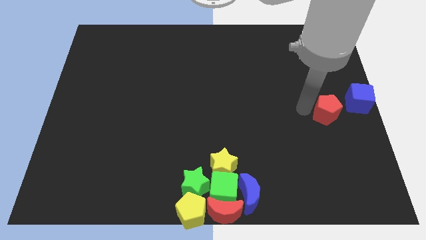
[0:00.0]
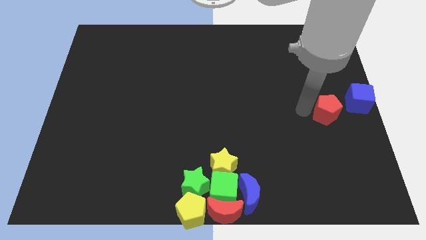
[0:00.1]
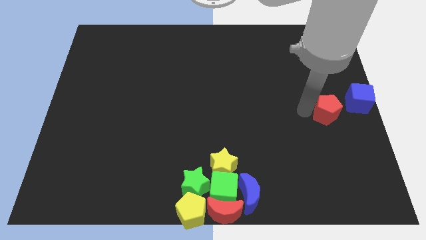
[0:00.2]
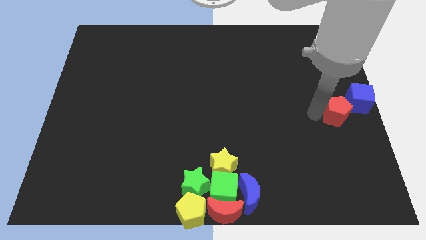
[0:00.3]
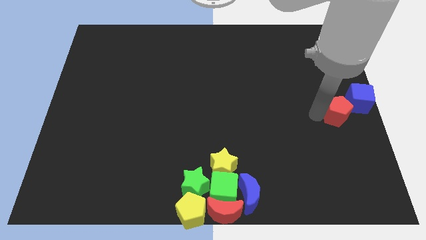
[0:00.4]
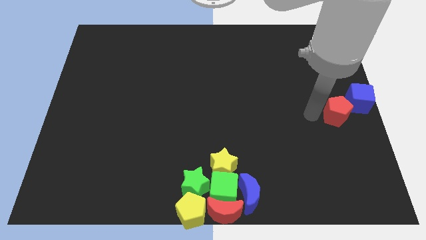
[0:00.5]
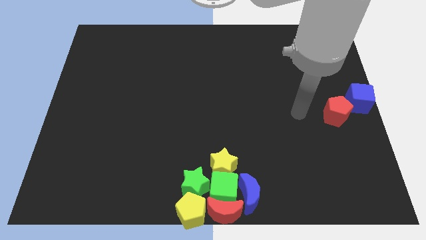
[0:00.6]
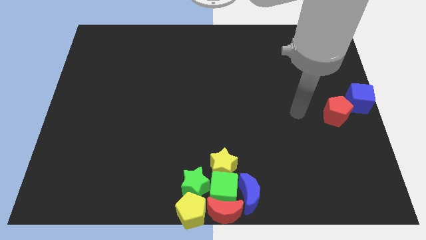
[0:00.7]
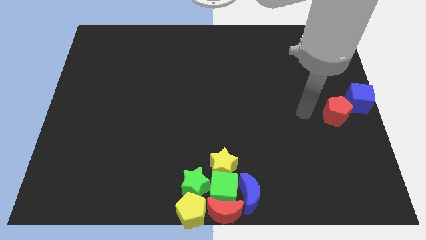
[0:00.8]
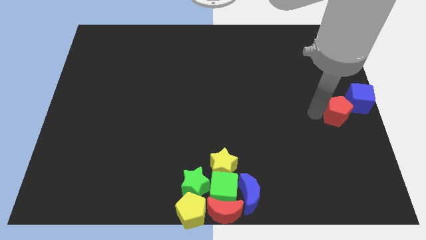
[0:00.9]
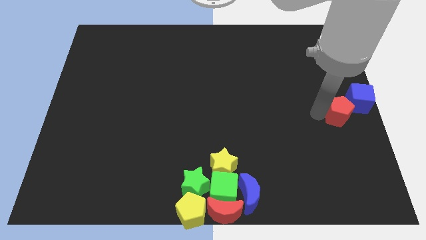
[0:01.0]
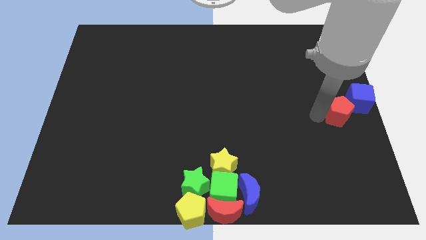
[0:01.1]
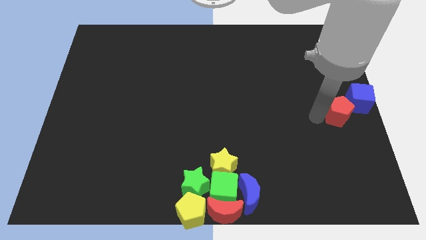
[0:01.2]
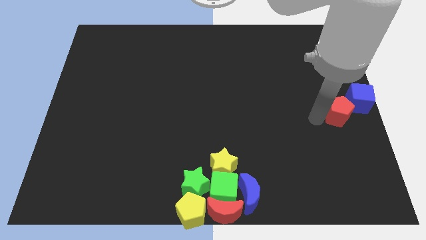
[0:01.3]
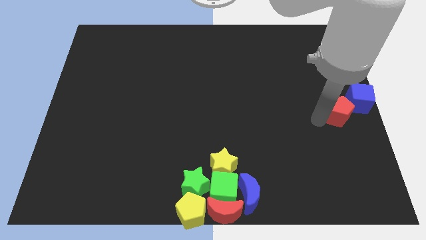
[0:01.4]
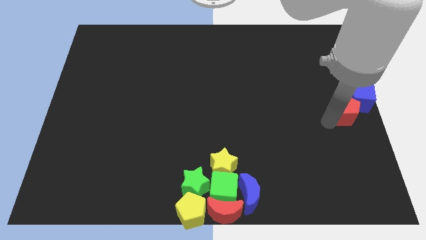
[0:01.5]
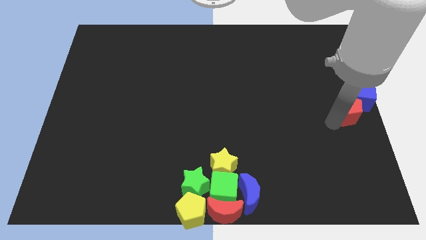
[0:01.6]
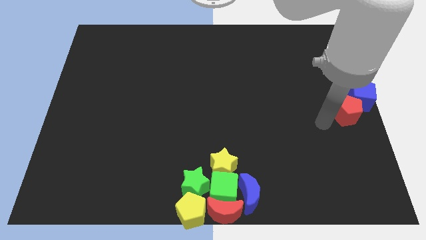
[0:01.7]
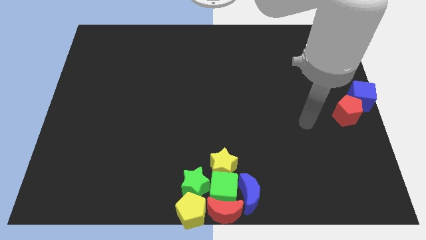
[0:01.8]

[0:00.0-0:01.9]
move the red pentagon into the blue cube

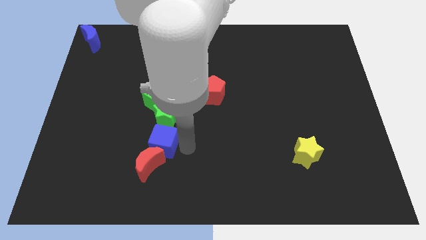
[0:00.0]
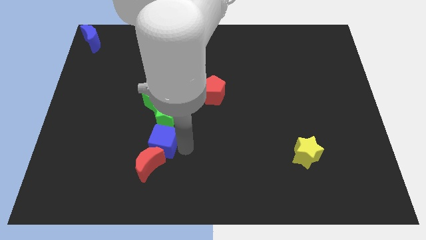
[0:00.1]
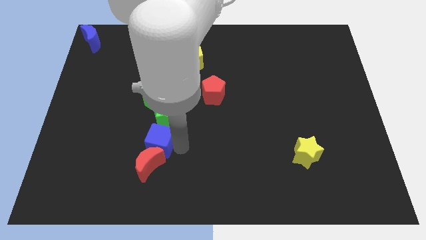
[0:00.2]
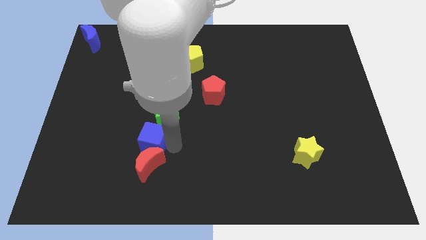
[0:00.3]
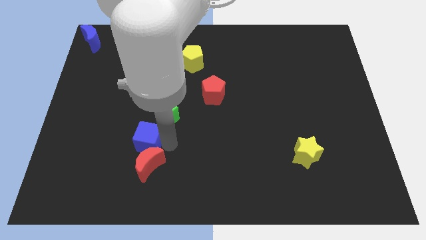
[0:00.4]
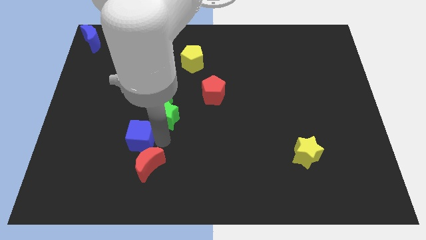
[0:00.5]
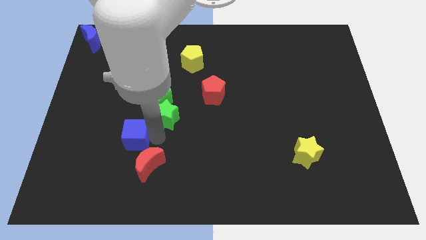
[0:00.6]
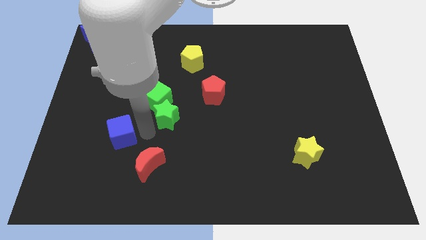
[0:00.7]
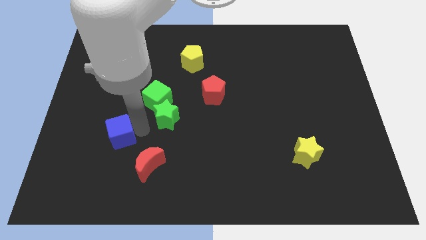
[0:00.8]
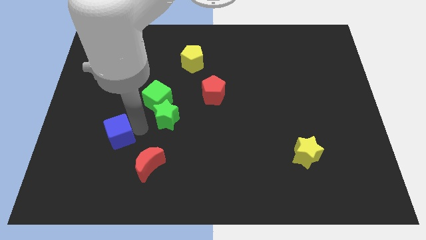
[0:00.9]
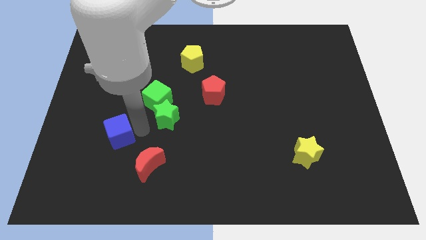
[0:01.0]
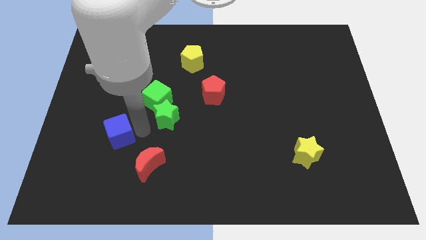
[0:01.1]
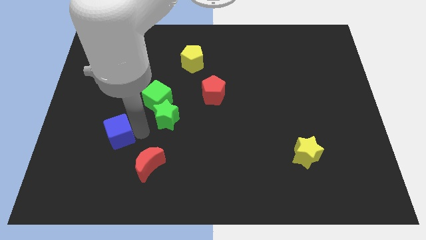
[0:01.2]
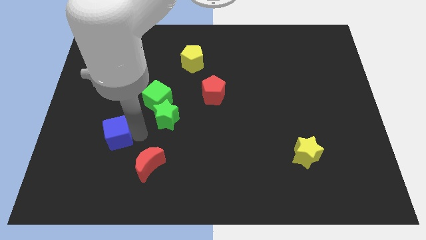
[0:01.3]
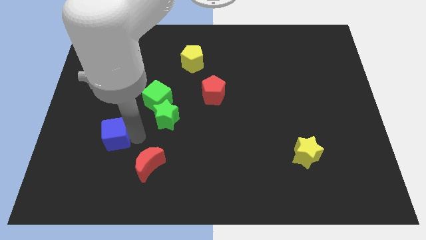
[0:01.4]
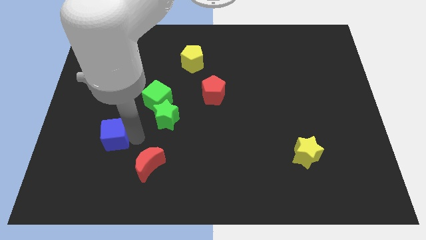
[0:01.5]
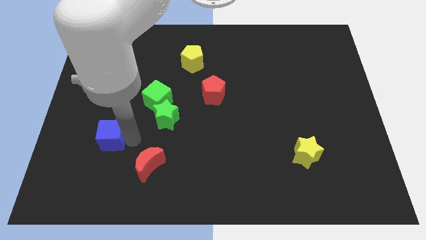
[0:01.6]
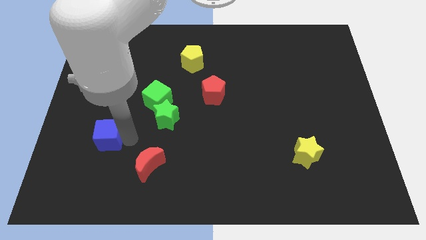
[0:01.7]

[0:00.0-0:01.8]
move the blue cube away from the top side of the red block

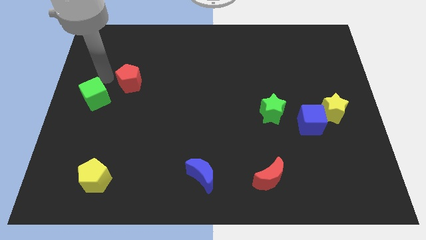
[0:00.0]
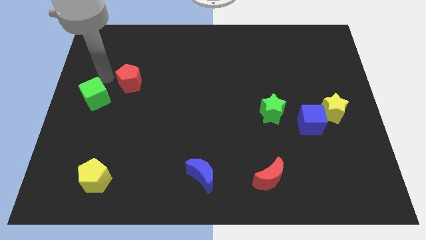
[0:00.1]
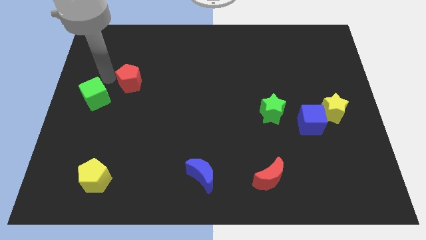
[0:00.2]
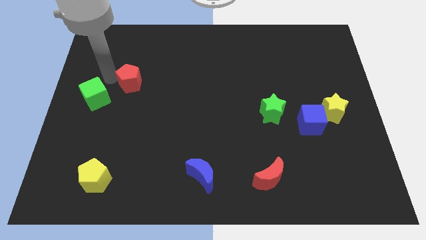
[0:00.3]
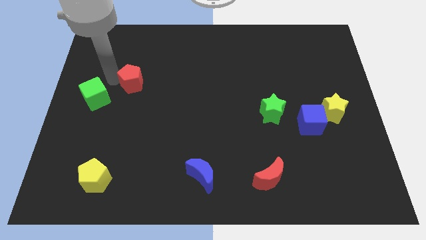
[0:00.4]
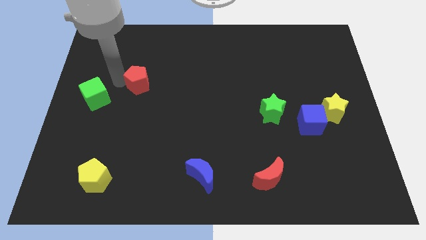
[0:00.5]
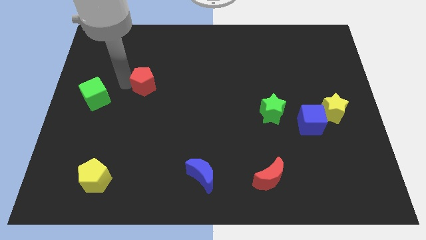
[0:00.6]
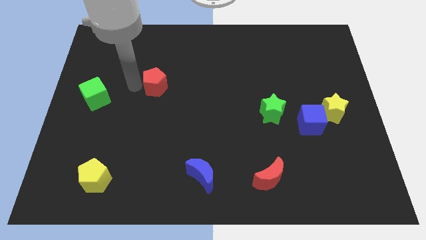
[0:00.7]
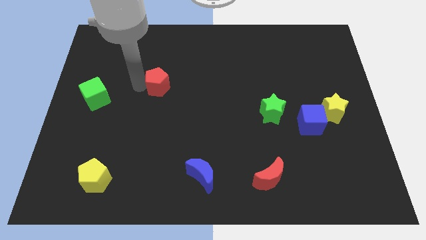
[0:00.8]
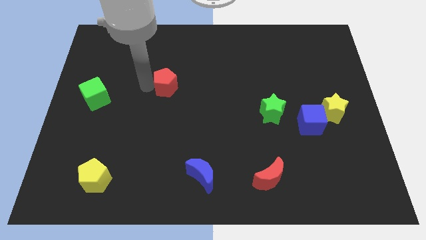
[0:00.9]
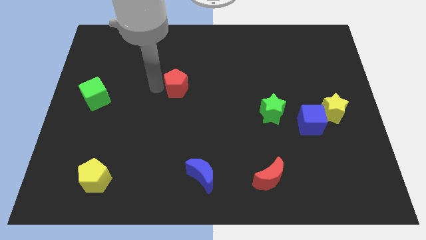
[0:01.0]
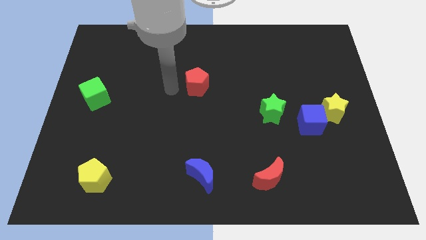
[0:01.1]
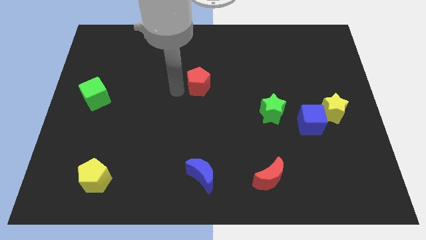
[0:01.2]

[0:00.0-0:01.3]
slide red pentagon at center

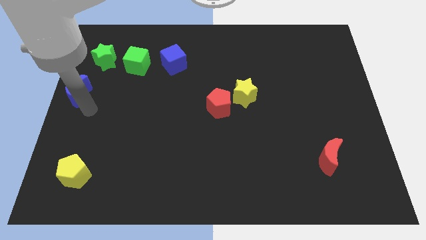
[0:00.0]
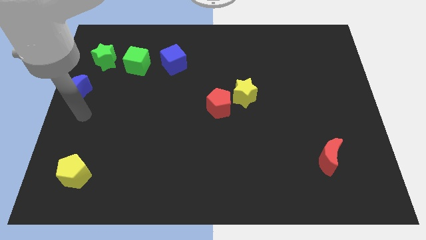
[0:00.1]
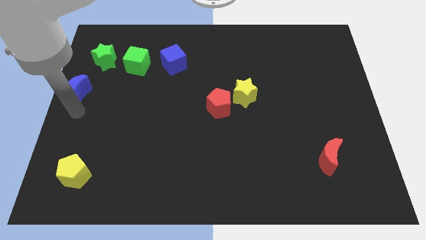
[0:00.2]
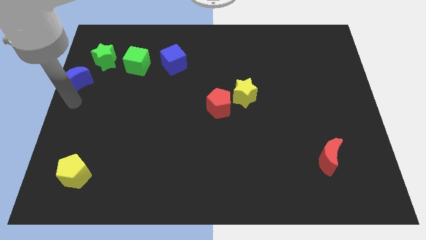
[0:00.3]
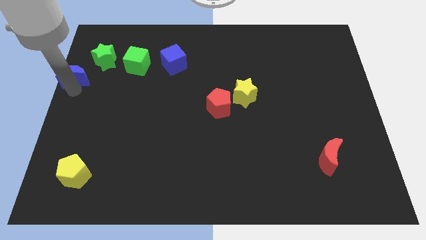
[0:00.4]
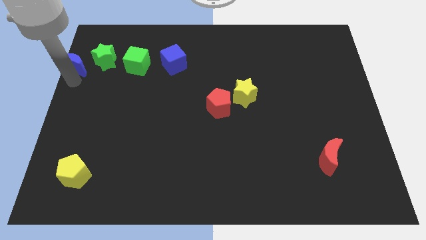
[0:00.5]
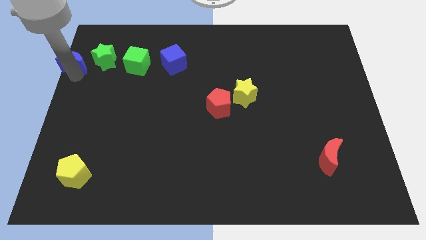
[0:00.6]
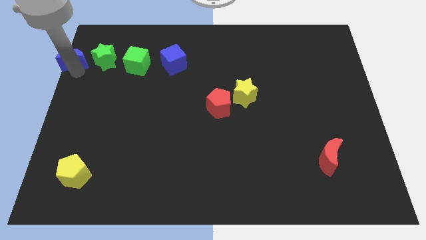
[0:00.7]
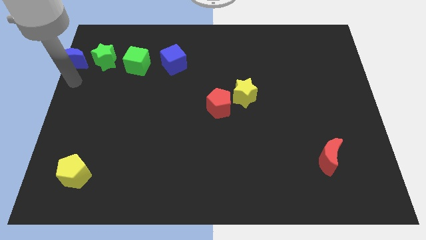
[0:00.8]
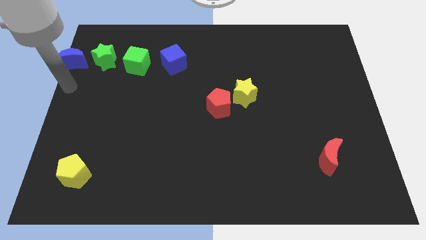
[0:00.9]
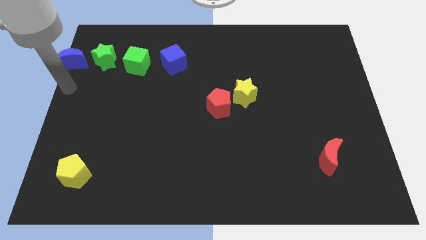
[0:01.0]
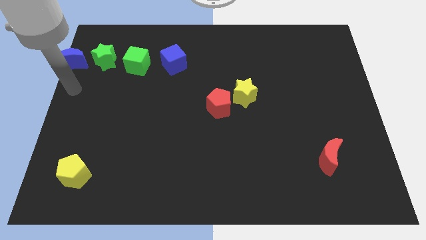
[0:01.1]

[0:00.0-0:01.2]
place the blue moon to the left side of green star

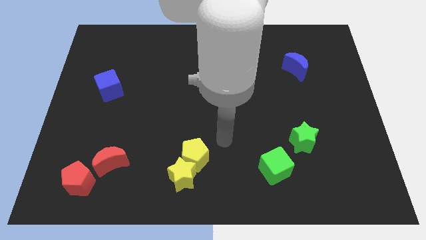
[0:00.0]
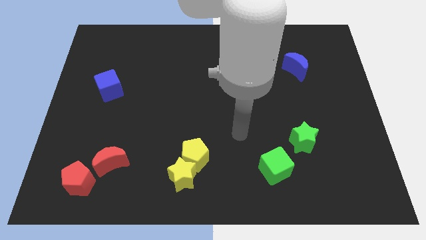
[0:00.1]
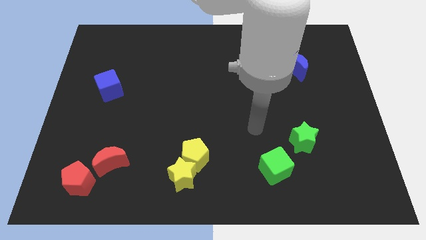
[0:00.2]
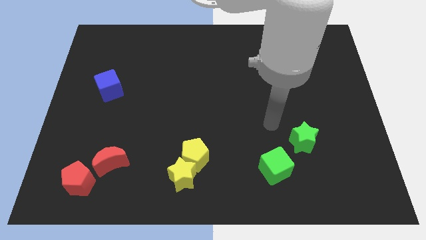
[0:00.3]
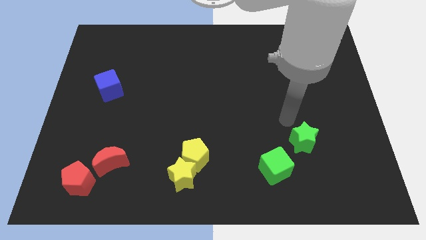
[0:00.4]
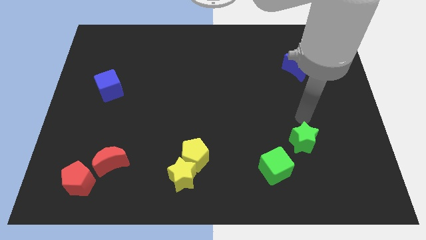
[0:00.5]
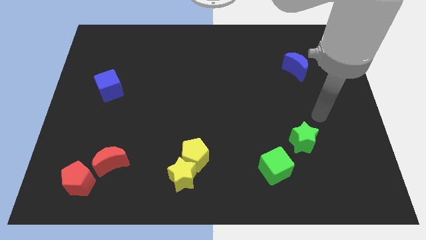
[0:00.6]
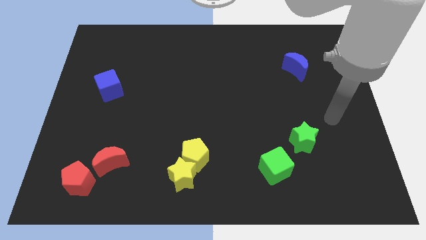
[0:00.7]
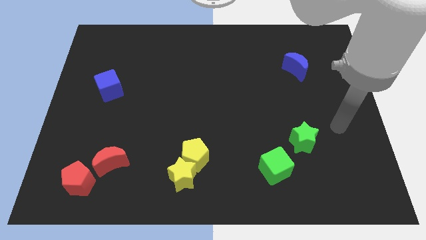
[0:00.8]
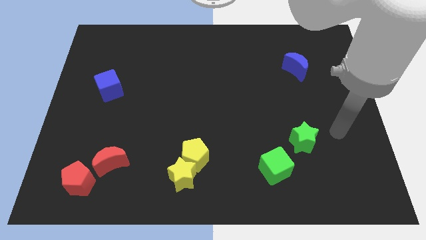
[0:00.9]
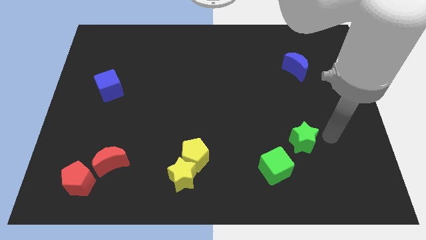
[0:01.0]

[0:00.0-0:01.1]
place the arm at the right side of the green star

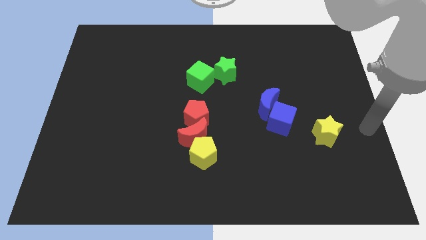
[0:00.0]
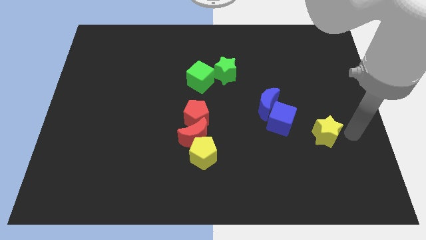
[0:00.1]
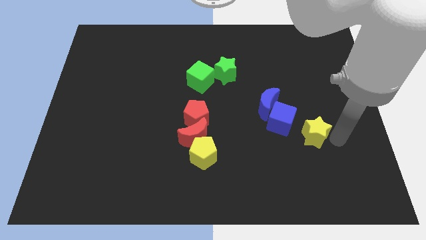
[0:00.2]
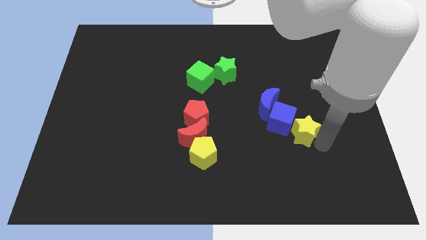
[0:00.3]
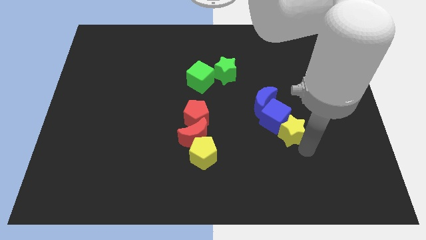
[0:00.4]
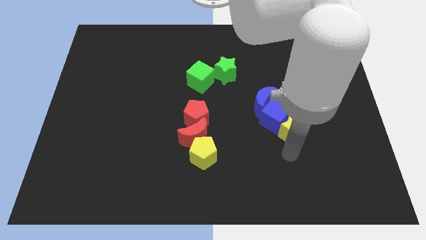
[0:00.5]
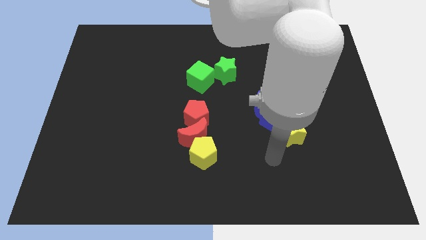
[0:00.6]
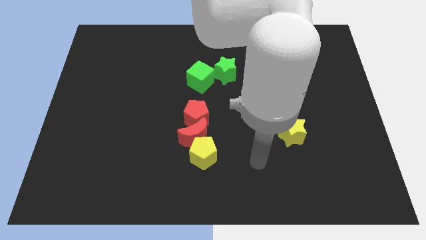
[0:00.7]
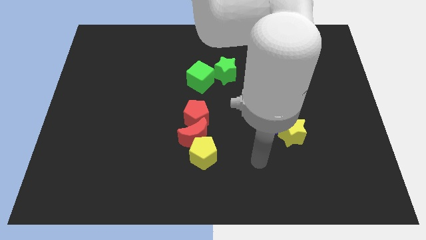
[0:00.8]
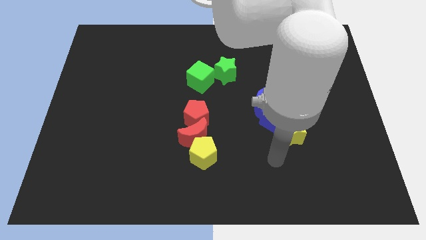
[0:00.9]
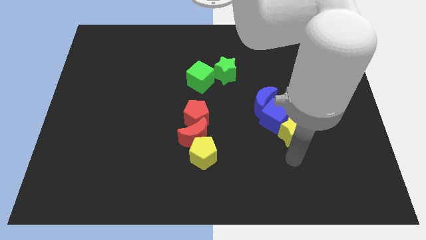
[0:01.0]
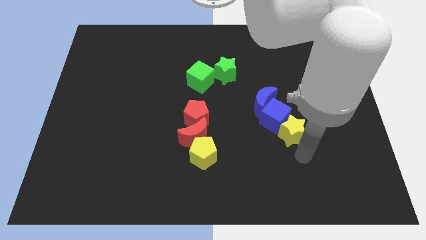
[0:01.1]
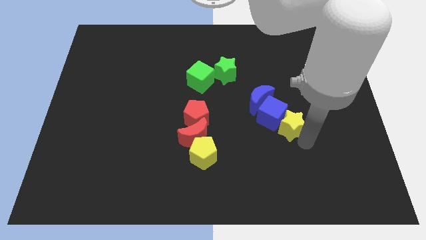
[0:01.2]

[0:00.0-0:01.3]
push the yellow star below the blue cube

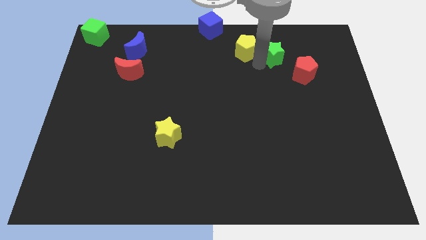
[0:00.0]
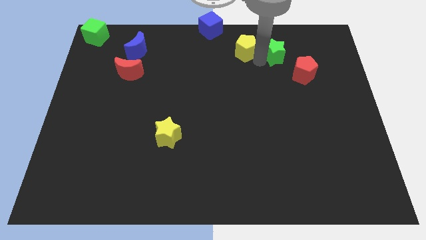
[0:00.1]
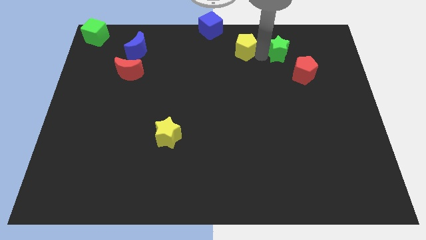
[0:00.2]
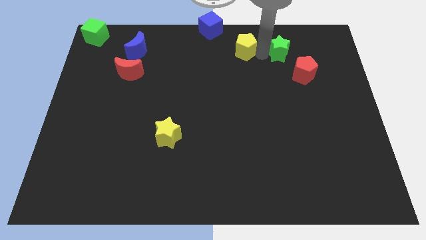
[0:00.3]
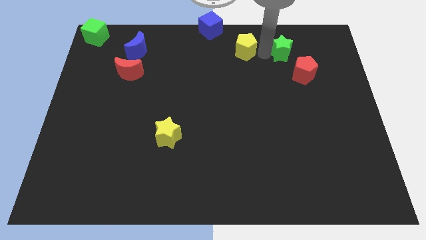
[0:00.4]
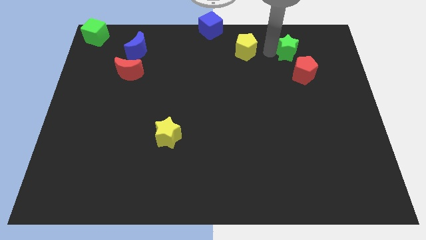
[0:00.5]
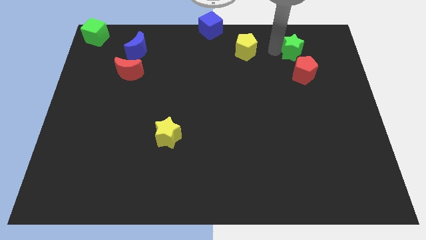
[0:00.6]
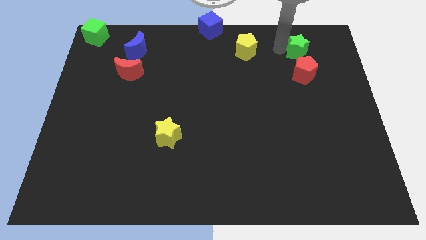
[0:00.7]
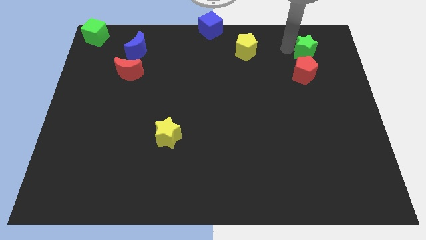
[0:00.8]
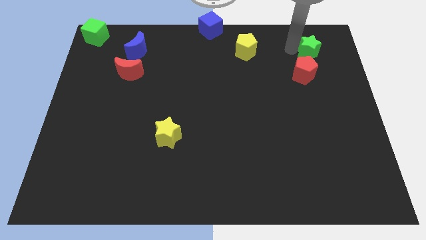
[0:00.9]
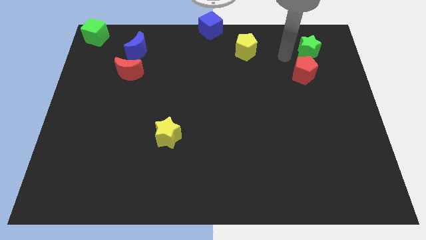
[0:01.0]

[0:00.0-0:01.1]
separate green star from yellow pentagon
